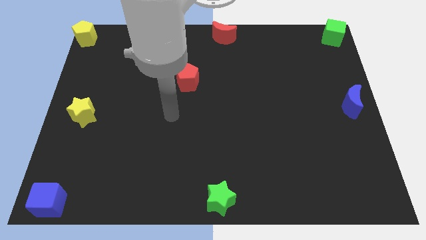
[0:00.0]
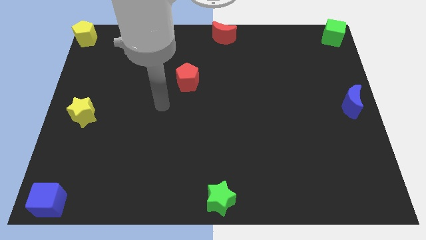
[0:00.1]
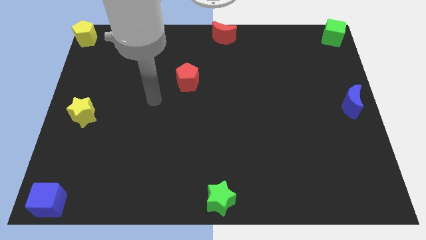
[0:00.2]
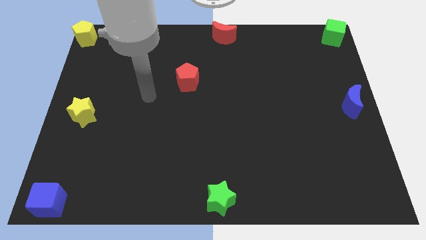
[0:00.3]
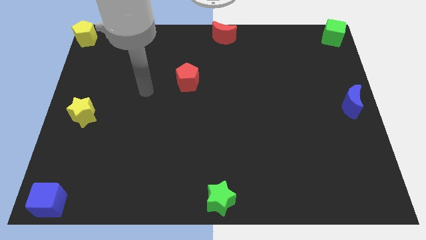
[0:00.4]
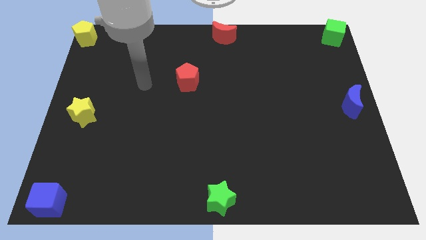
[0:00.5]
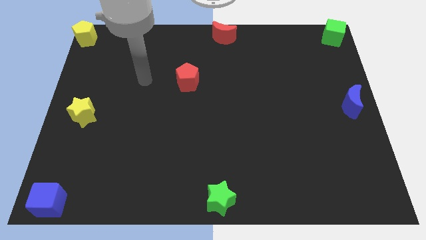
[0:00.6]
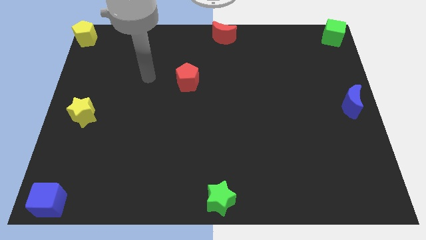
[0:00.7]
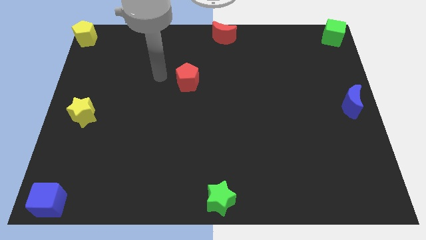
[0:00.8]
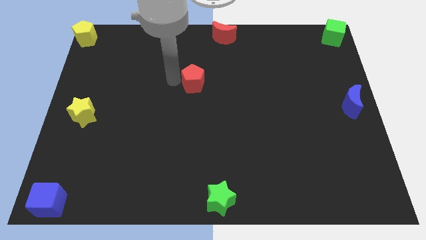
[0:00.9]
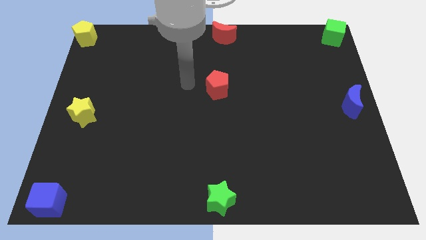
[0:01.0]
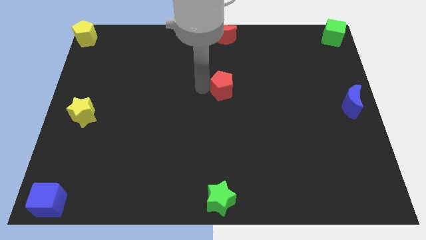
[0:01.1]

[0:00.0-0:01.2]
move the red pentagon parallel to the red crescent

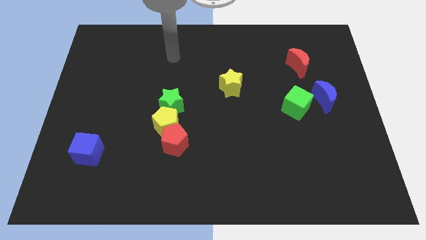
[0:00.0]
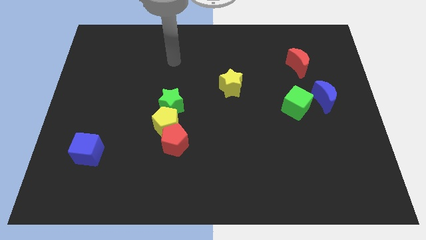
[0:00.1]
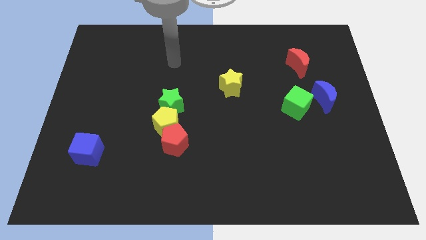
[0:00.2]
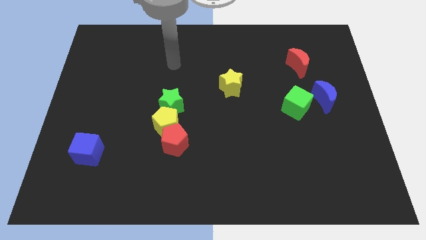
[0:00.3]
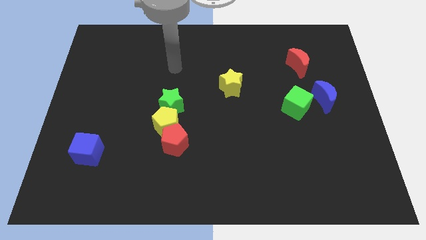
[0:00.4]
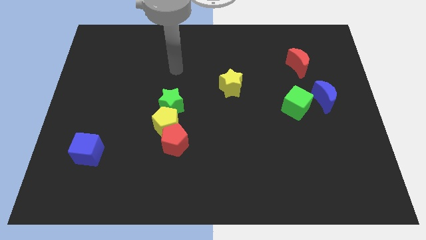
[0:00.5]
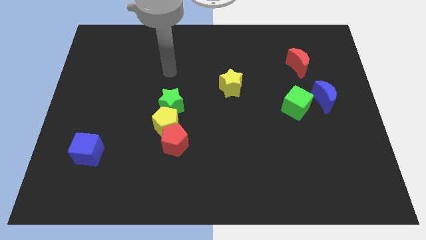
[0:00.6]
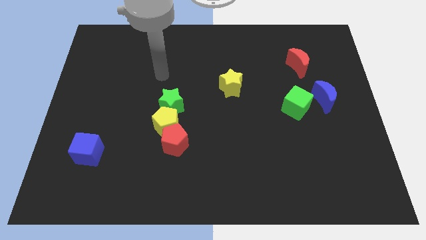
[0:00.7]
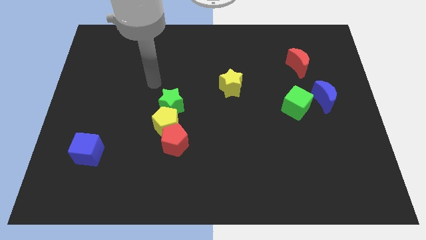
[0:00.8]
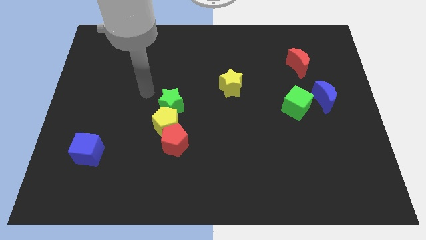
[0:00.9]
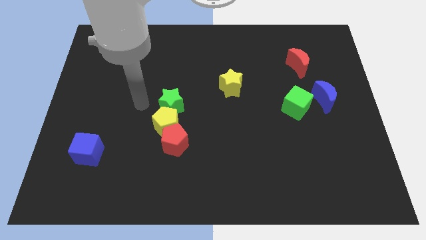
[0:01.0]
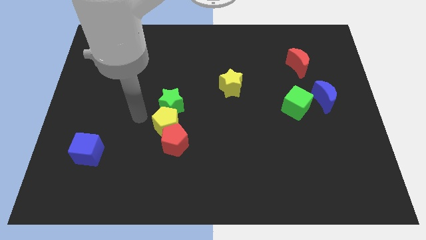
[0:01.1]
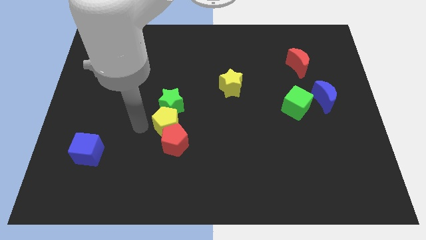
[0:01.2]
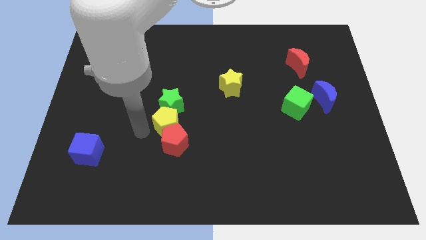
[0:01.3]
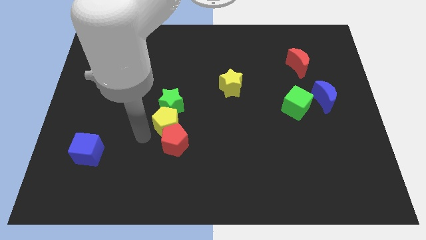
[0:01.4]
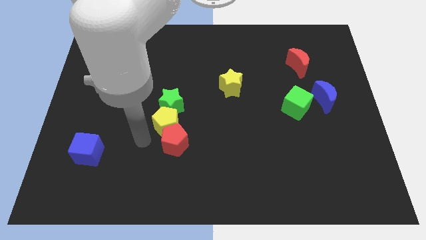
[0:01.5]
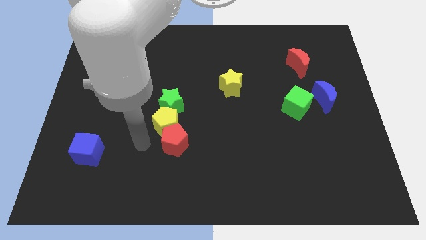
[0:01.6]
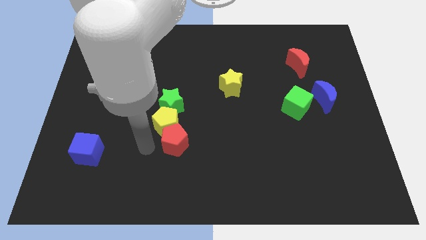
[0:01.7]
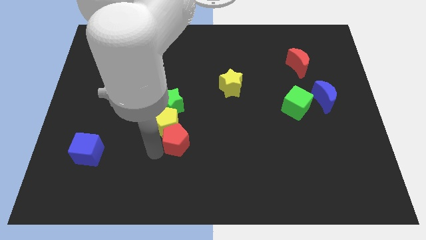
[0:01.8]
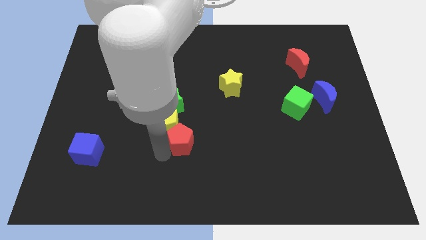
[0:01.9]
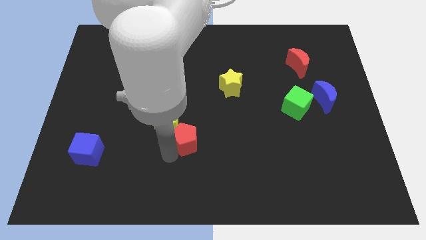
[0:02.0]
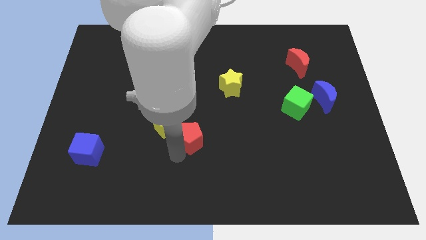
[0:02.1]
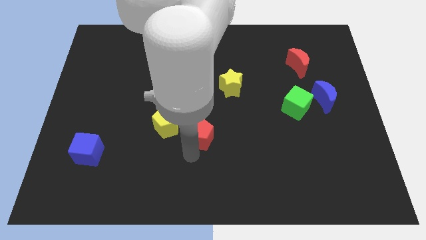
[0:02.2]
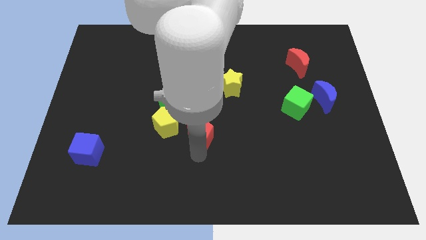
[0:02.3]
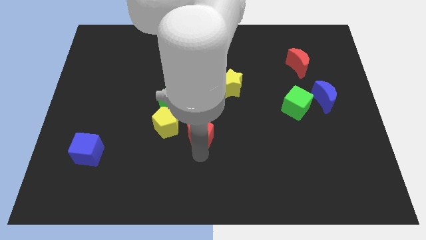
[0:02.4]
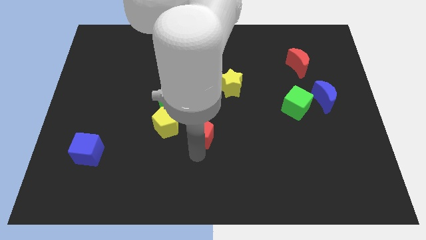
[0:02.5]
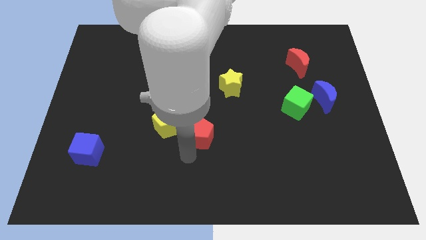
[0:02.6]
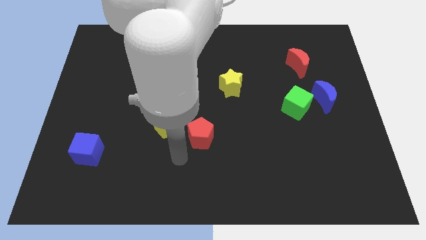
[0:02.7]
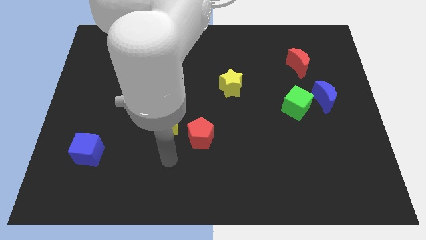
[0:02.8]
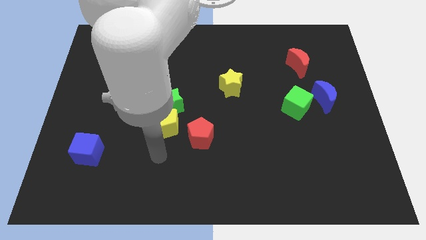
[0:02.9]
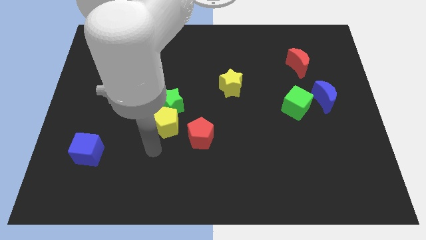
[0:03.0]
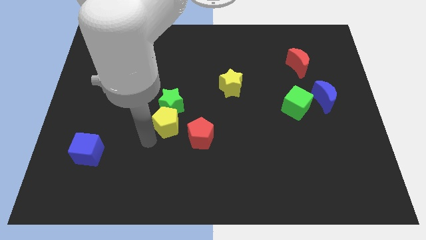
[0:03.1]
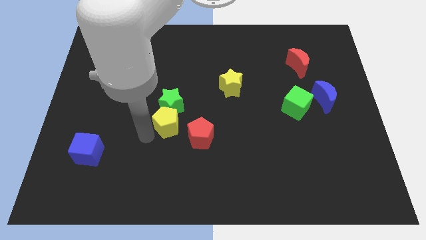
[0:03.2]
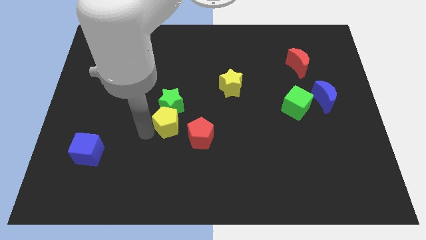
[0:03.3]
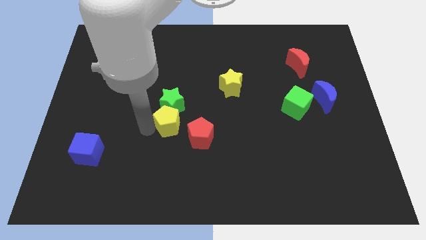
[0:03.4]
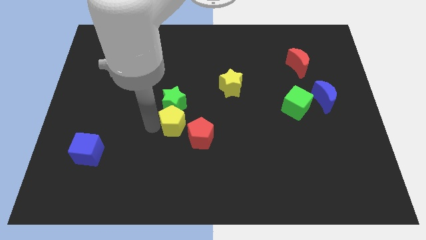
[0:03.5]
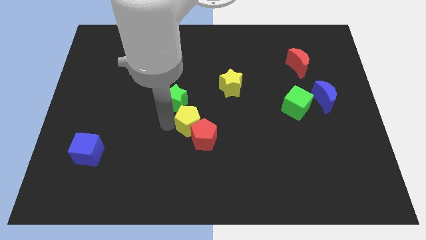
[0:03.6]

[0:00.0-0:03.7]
go near yellow pentagon

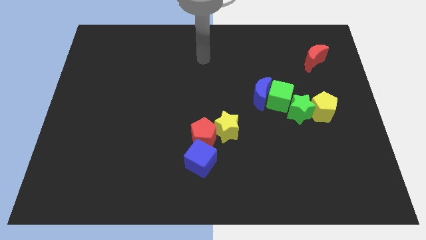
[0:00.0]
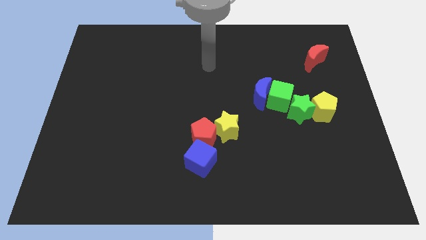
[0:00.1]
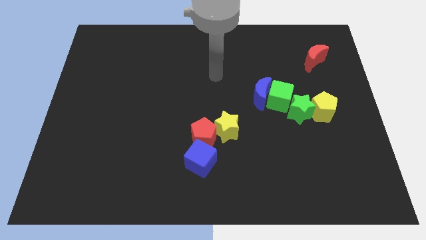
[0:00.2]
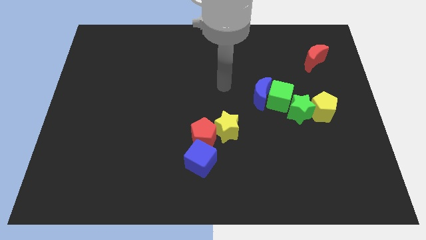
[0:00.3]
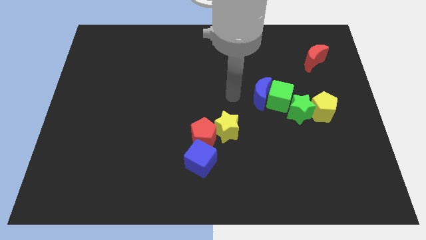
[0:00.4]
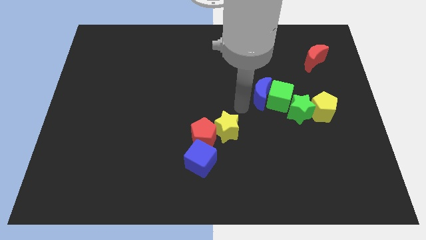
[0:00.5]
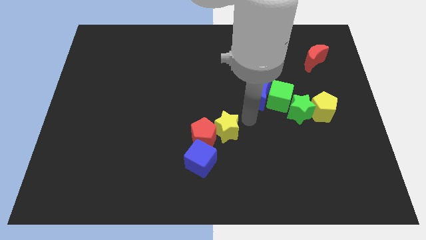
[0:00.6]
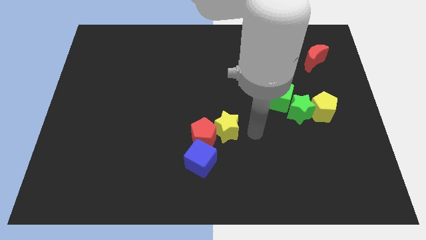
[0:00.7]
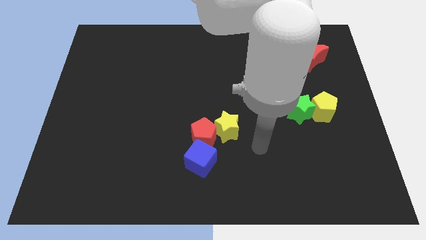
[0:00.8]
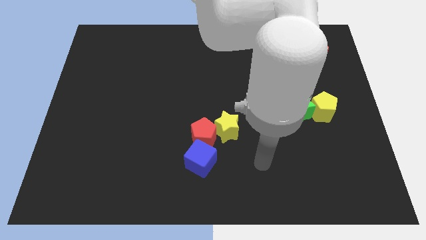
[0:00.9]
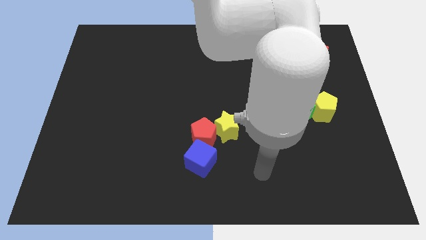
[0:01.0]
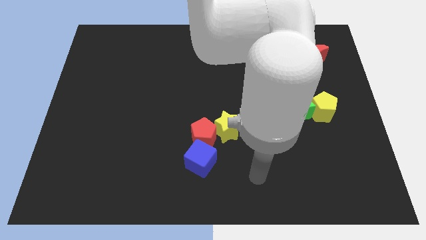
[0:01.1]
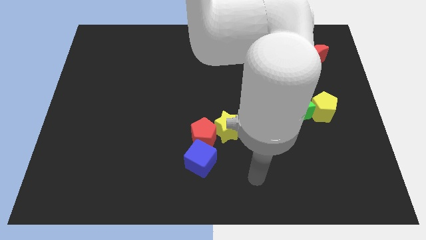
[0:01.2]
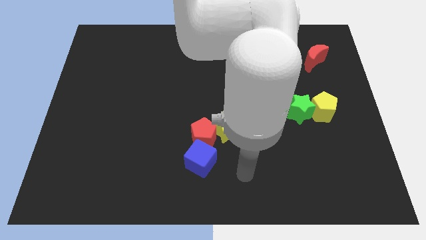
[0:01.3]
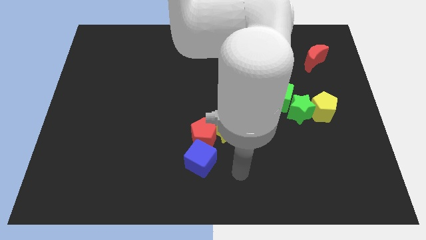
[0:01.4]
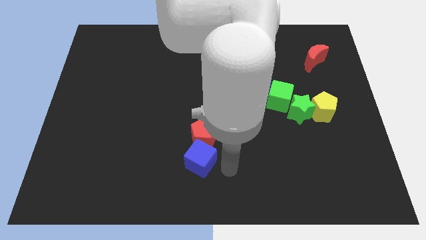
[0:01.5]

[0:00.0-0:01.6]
move the arm to the right side of the blue cube

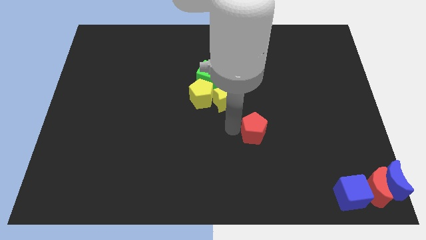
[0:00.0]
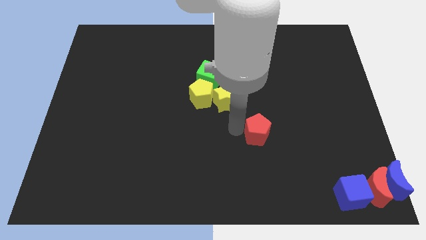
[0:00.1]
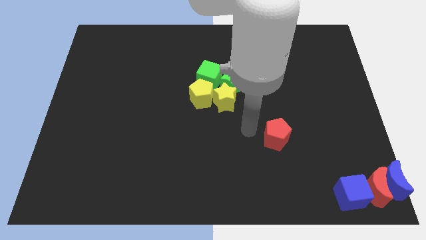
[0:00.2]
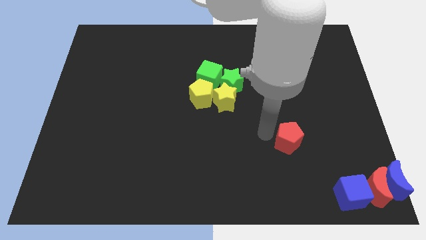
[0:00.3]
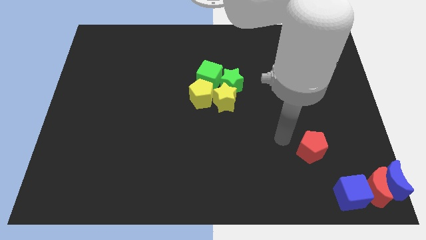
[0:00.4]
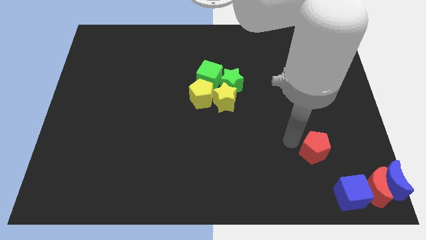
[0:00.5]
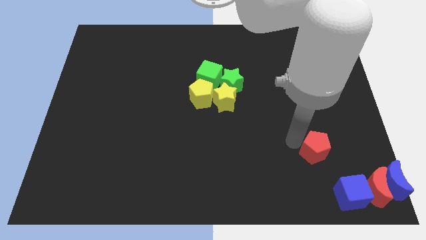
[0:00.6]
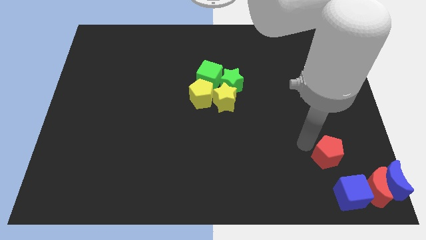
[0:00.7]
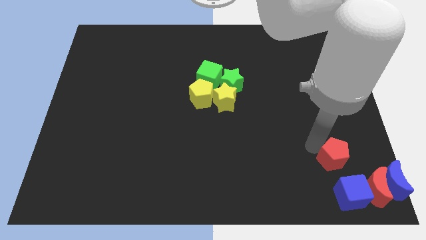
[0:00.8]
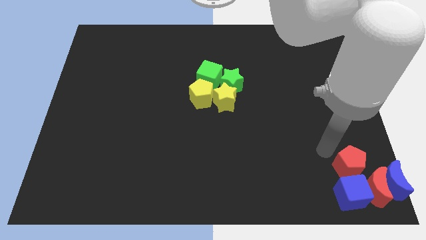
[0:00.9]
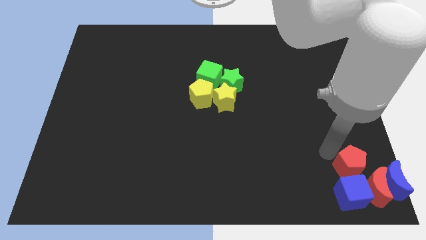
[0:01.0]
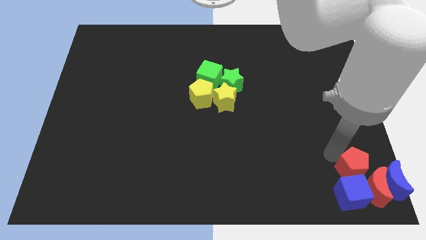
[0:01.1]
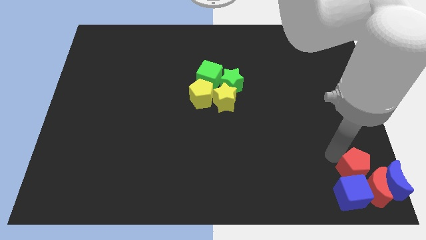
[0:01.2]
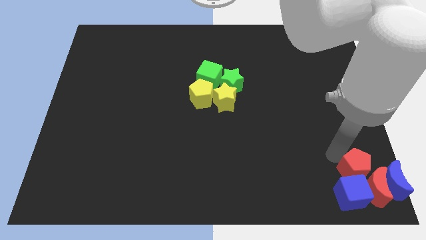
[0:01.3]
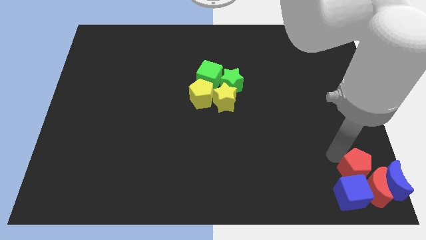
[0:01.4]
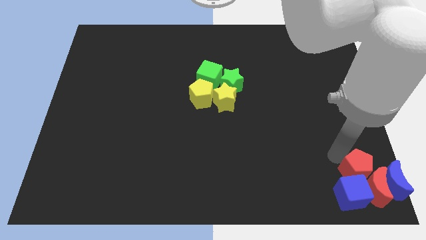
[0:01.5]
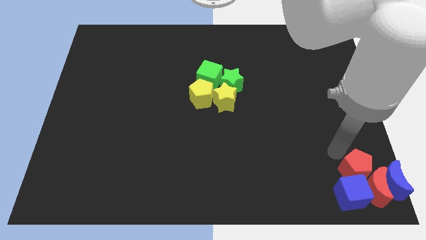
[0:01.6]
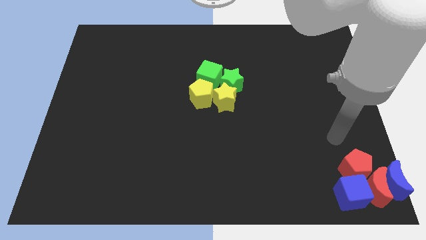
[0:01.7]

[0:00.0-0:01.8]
slide the red pentagon to the bottom right corner

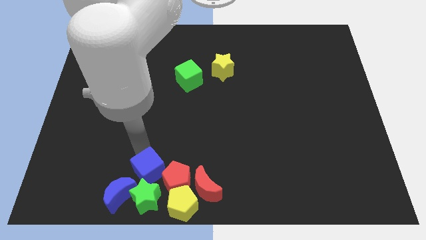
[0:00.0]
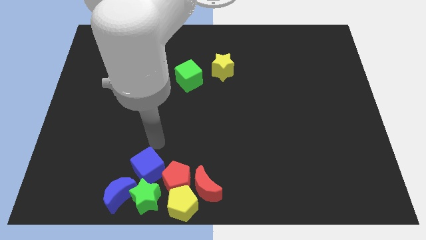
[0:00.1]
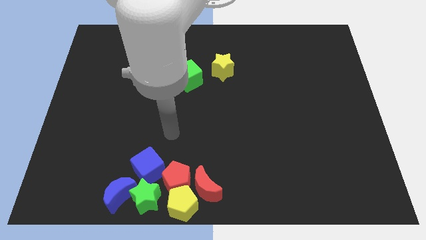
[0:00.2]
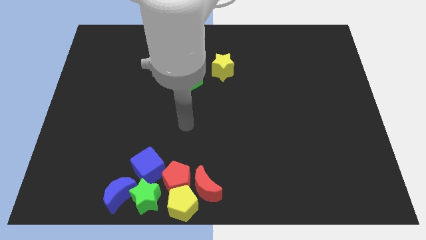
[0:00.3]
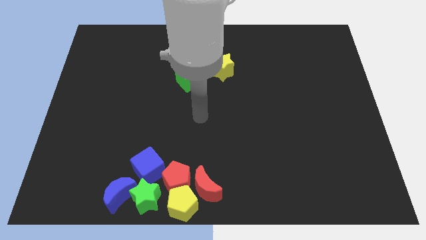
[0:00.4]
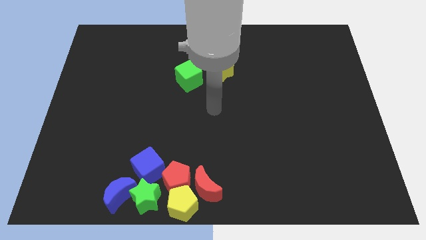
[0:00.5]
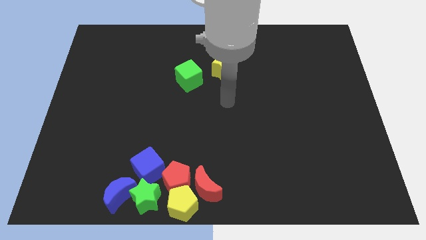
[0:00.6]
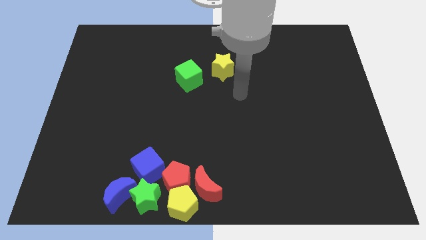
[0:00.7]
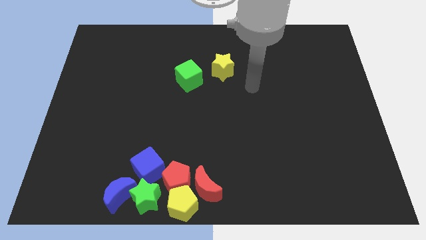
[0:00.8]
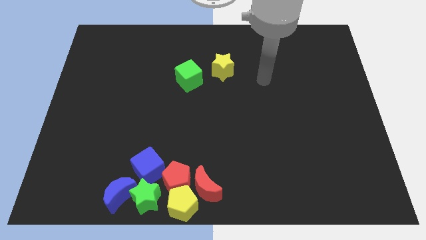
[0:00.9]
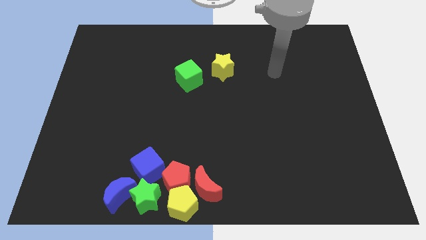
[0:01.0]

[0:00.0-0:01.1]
move the arm to the right of the yellow star
